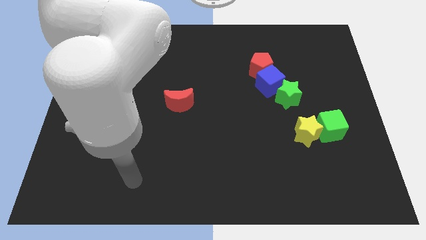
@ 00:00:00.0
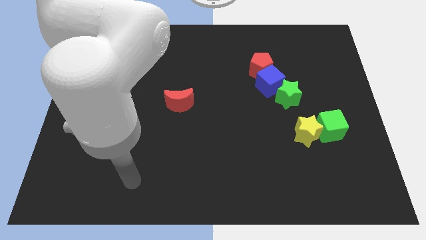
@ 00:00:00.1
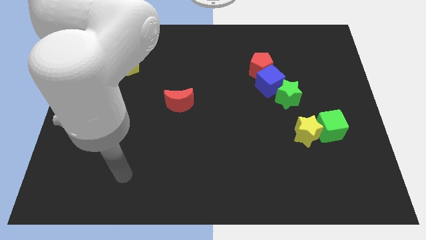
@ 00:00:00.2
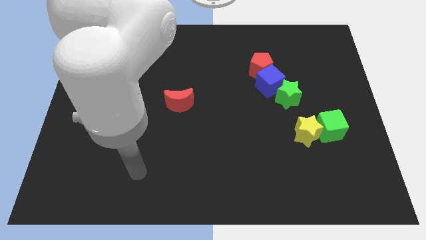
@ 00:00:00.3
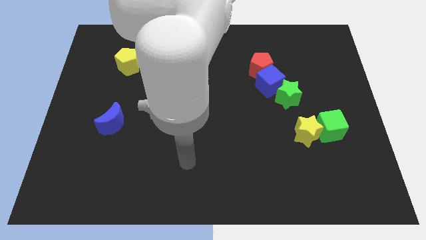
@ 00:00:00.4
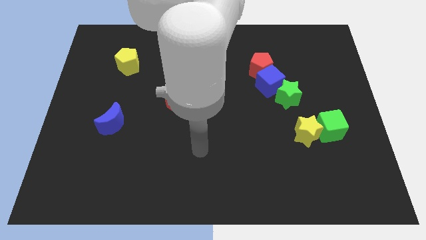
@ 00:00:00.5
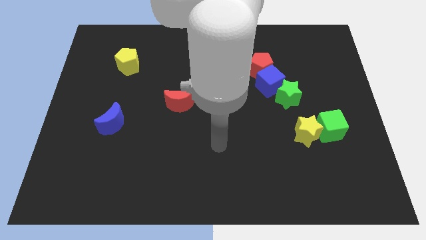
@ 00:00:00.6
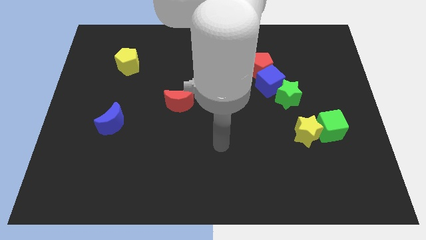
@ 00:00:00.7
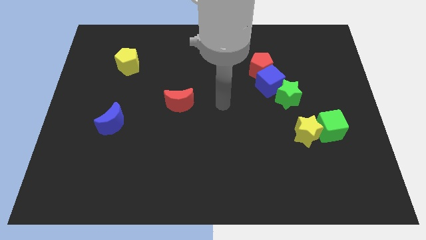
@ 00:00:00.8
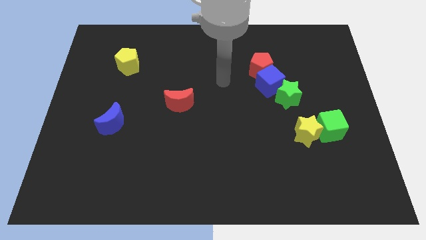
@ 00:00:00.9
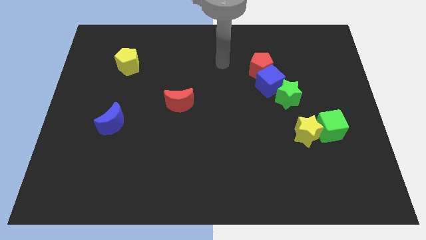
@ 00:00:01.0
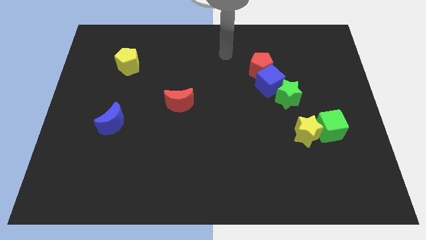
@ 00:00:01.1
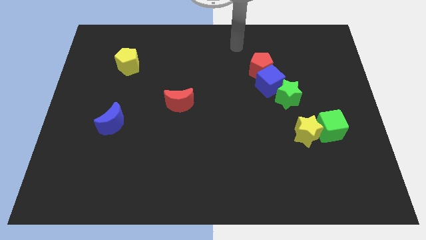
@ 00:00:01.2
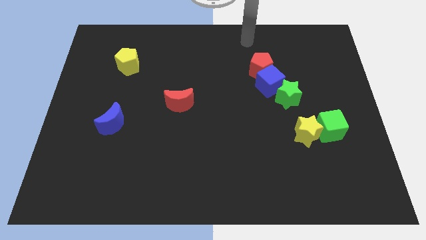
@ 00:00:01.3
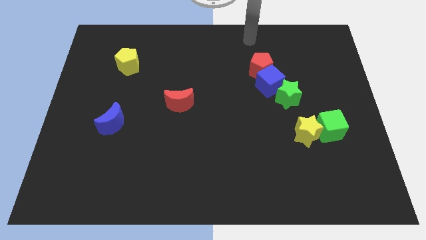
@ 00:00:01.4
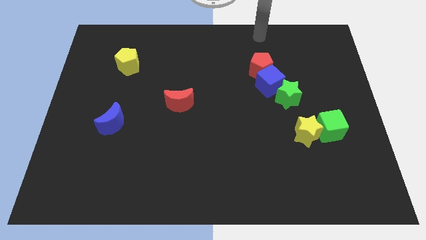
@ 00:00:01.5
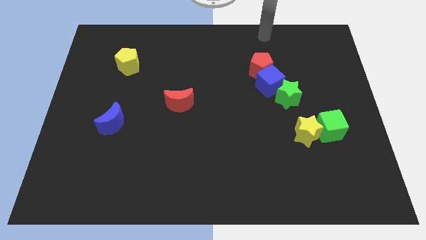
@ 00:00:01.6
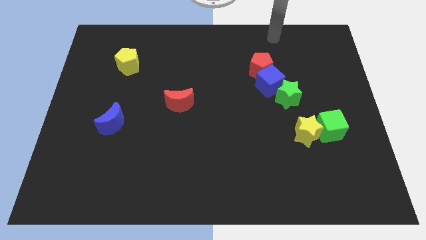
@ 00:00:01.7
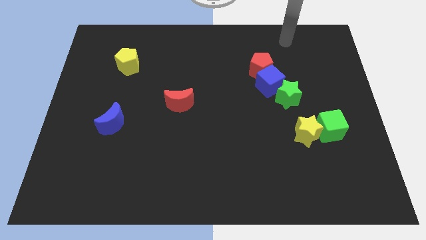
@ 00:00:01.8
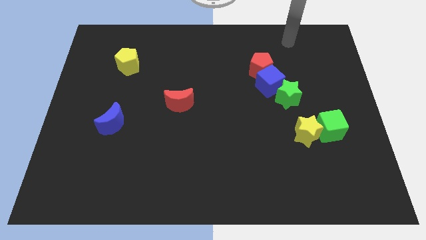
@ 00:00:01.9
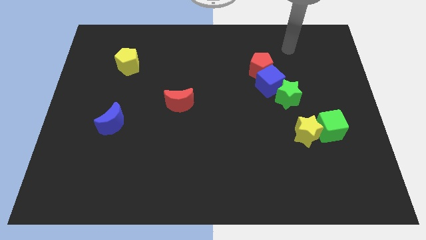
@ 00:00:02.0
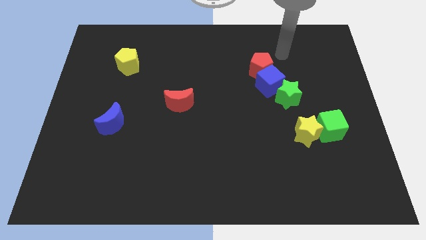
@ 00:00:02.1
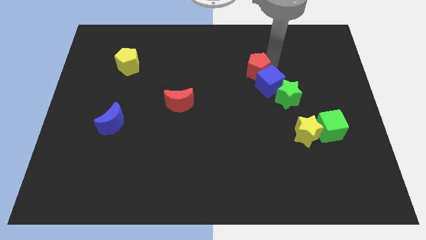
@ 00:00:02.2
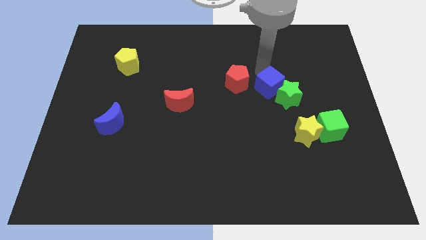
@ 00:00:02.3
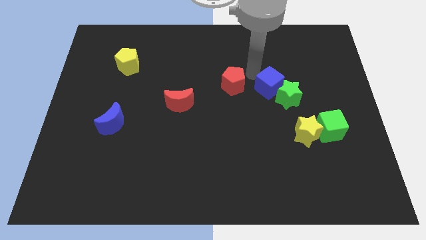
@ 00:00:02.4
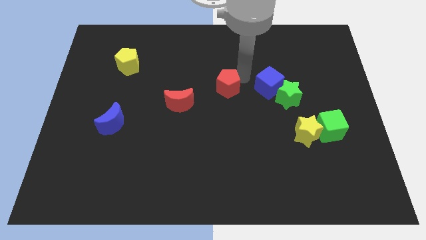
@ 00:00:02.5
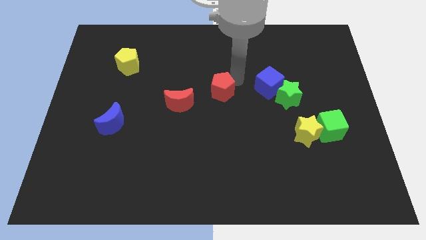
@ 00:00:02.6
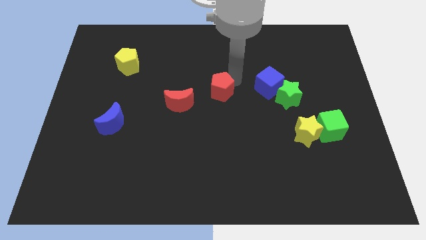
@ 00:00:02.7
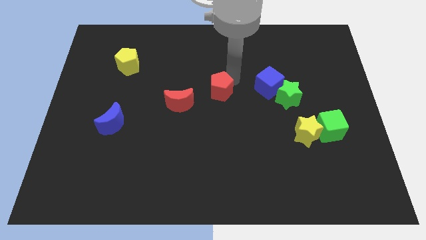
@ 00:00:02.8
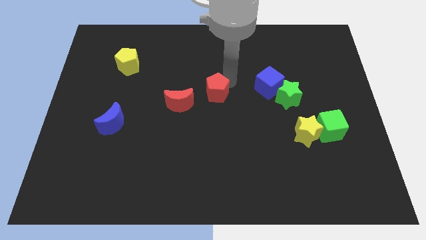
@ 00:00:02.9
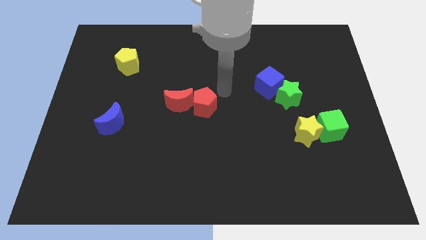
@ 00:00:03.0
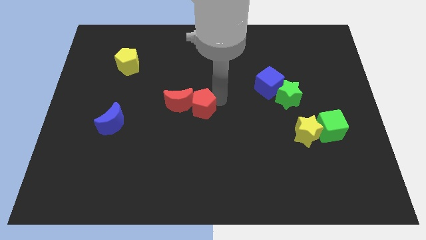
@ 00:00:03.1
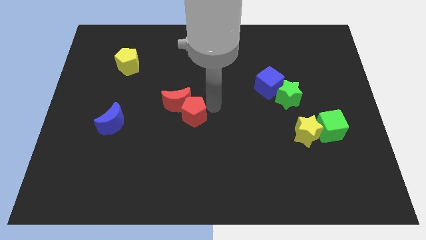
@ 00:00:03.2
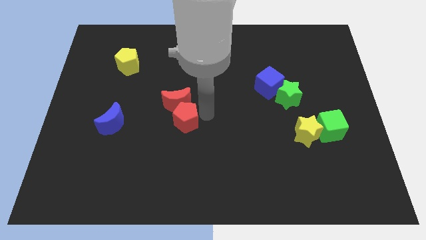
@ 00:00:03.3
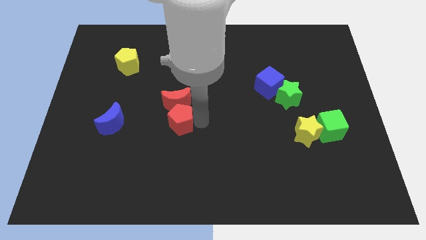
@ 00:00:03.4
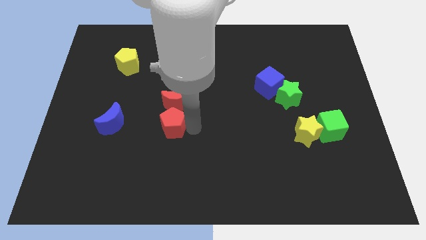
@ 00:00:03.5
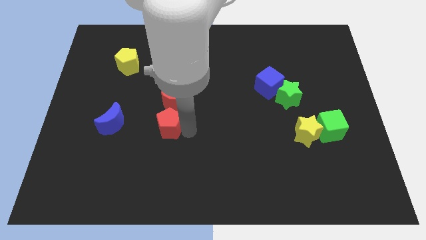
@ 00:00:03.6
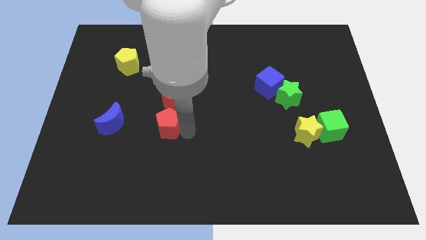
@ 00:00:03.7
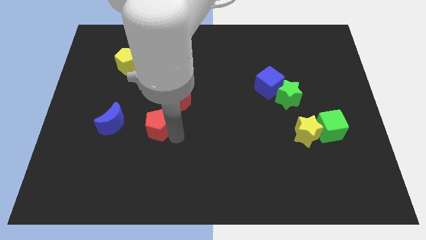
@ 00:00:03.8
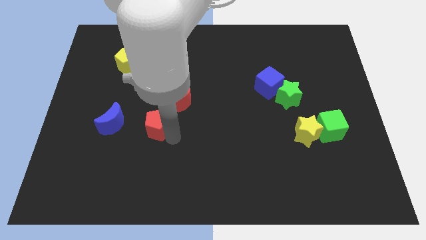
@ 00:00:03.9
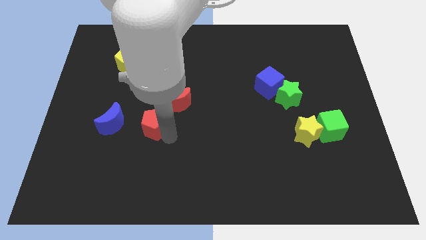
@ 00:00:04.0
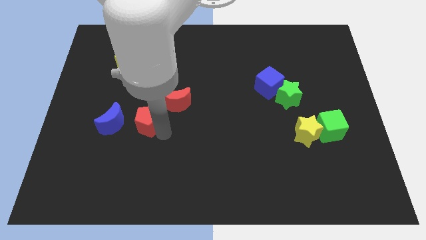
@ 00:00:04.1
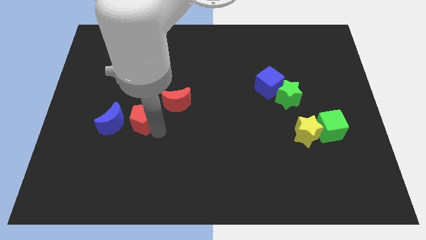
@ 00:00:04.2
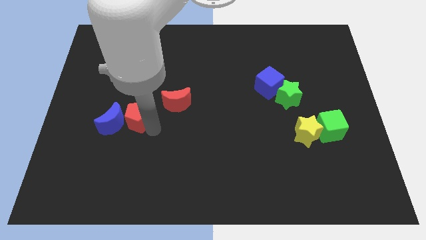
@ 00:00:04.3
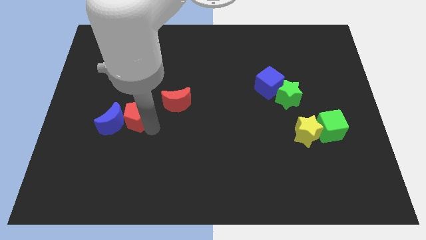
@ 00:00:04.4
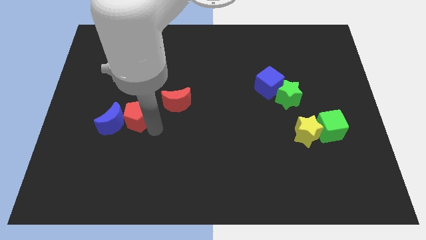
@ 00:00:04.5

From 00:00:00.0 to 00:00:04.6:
move the red pentagon next to the blue moon

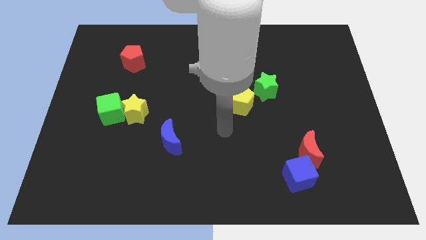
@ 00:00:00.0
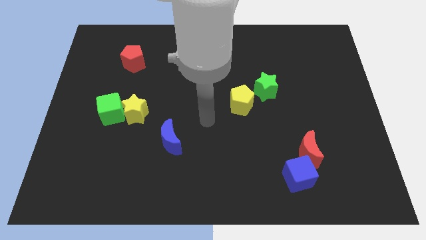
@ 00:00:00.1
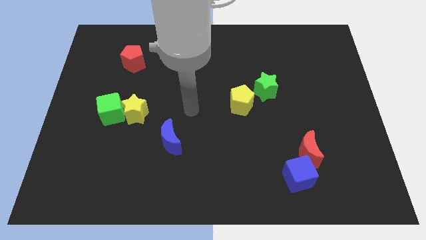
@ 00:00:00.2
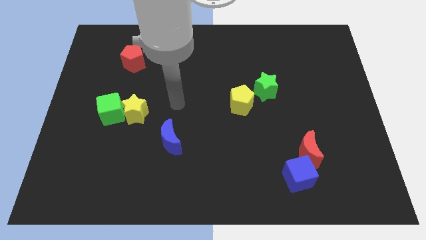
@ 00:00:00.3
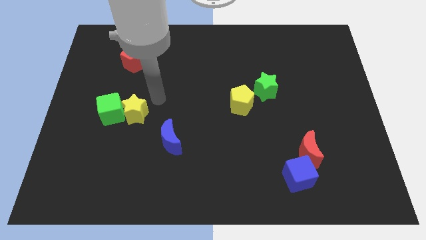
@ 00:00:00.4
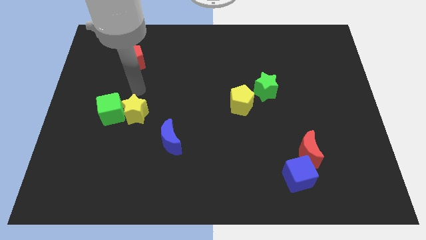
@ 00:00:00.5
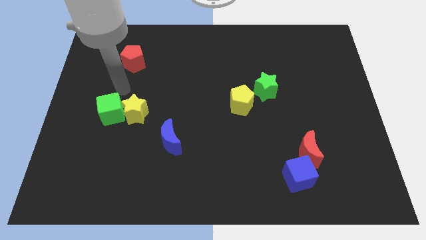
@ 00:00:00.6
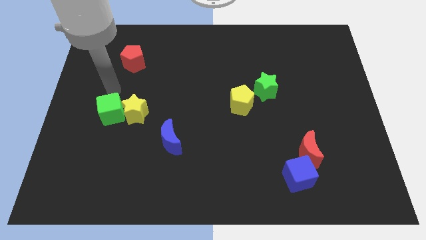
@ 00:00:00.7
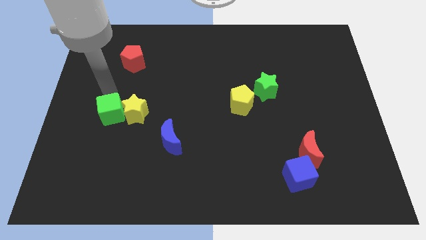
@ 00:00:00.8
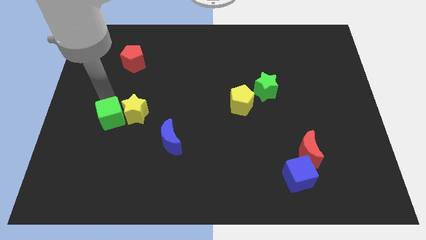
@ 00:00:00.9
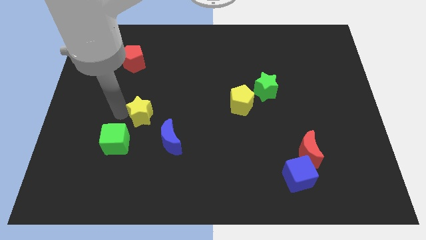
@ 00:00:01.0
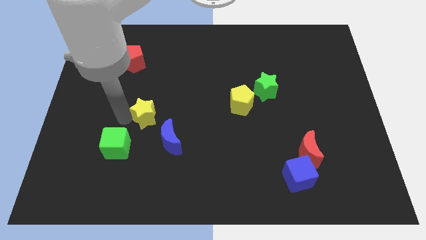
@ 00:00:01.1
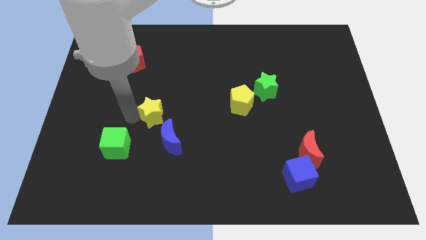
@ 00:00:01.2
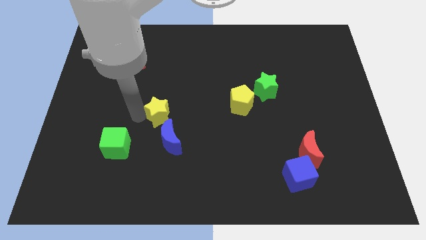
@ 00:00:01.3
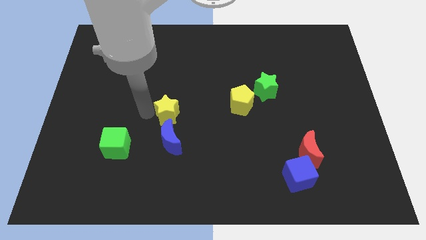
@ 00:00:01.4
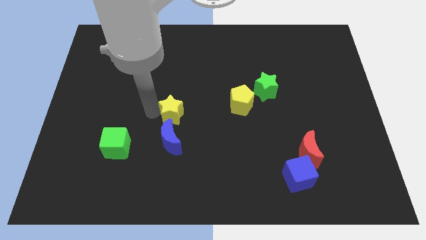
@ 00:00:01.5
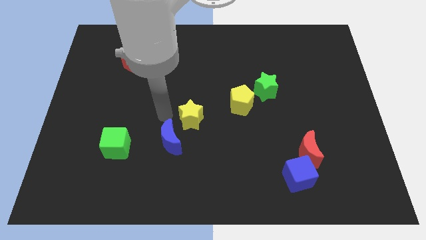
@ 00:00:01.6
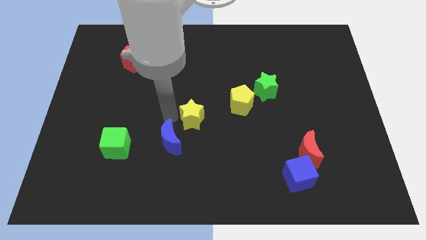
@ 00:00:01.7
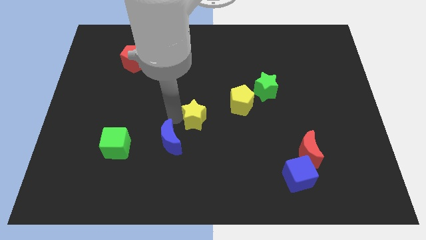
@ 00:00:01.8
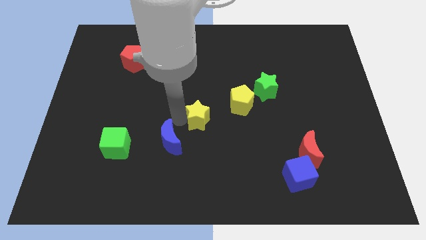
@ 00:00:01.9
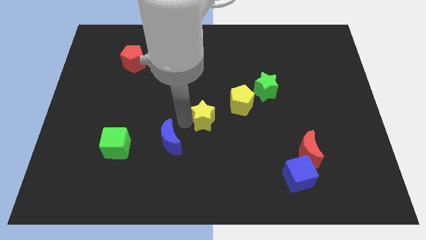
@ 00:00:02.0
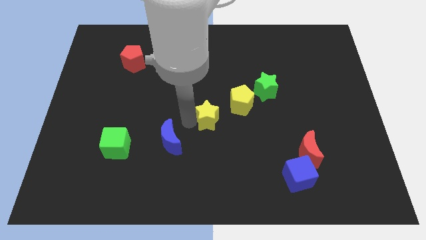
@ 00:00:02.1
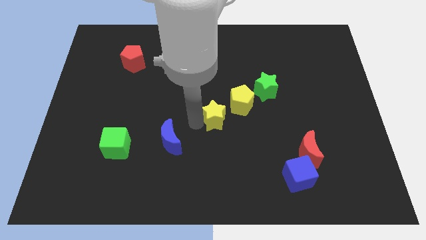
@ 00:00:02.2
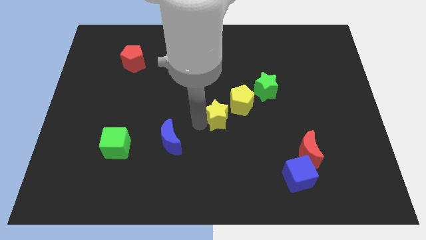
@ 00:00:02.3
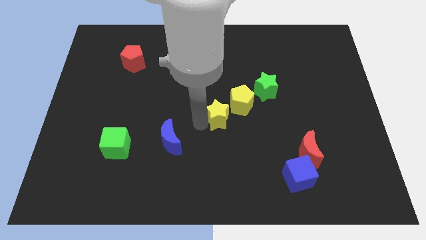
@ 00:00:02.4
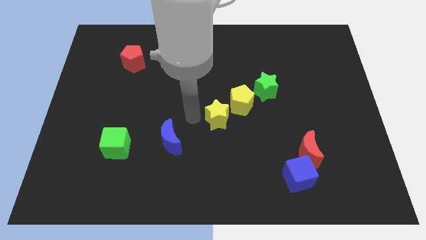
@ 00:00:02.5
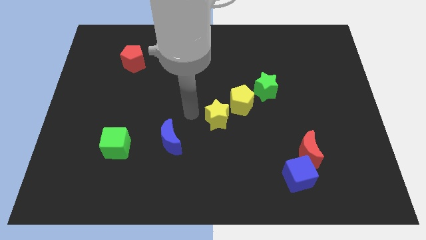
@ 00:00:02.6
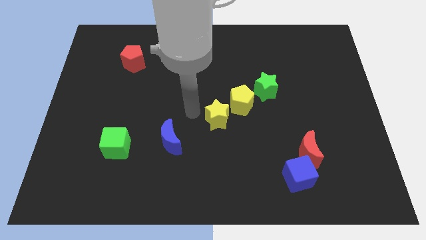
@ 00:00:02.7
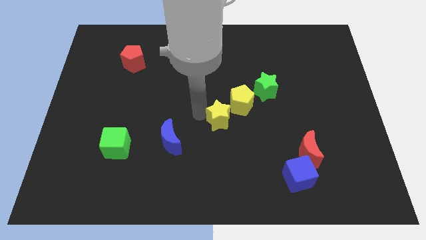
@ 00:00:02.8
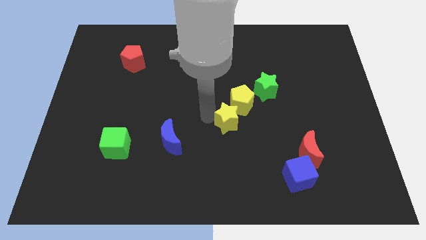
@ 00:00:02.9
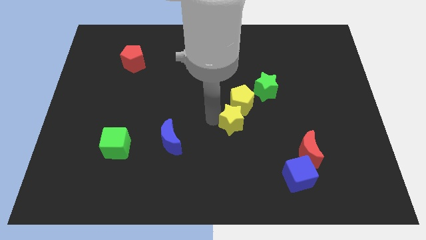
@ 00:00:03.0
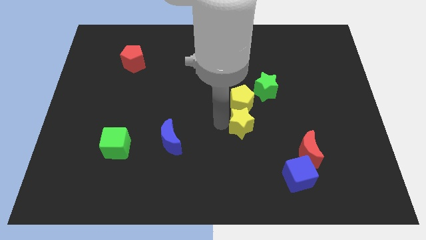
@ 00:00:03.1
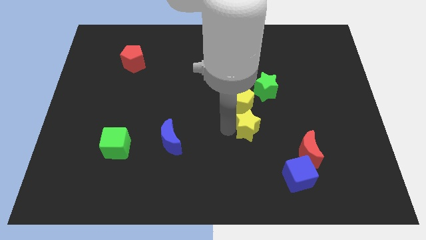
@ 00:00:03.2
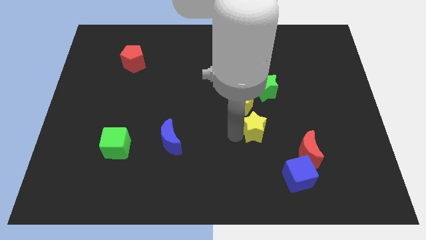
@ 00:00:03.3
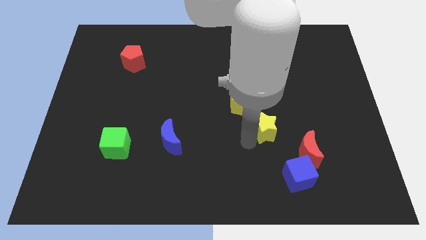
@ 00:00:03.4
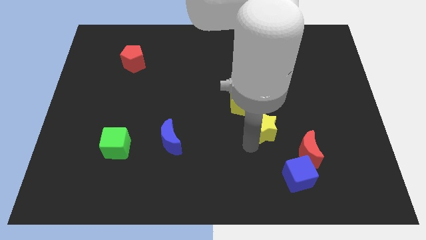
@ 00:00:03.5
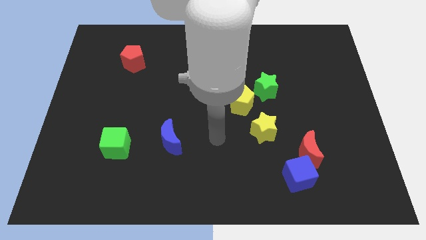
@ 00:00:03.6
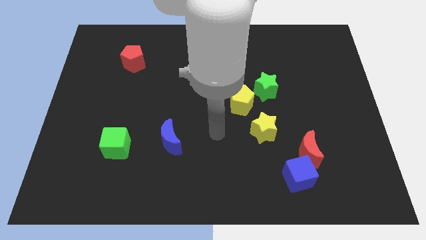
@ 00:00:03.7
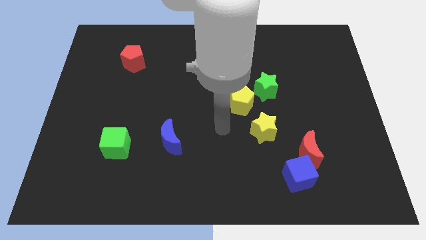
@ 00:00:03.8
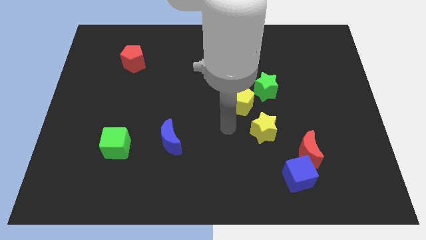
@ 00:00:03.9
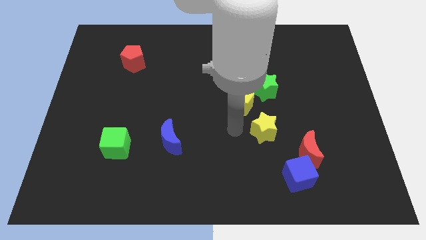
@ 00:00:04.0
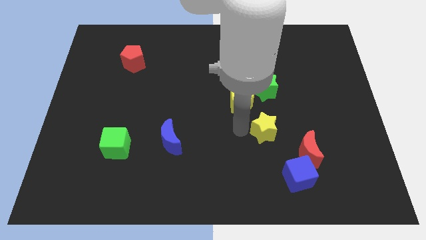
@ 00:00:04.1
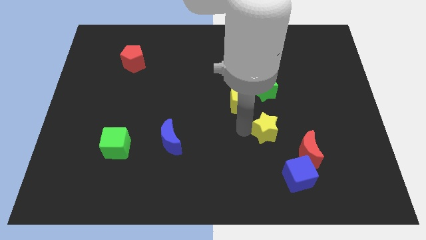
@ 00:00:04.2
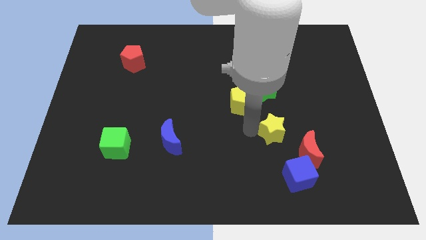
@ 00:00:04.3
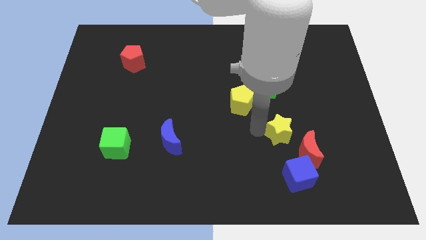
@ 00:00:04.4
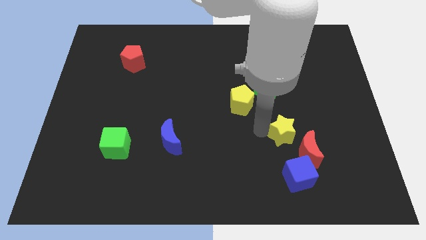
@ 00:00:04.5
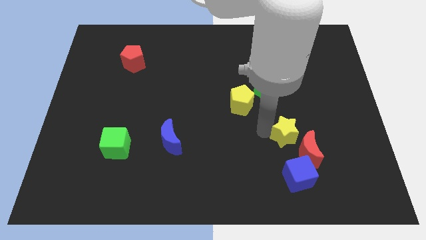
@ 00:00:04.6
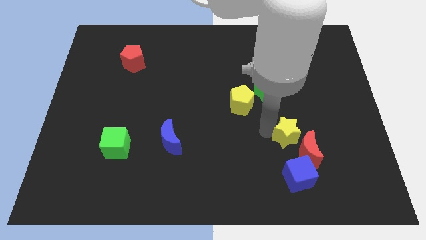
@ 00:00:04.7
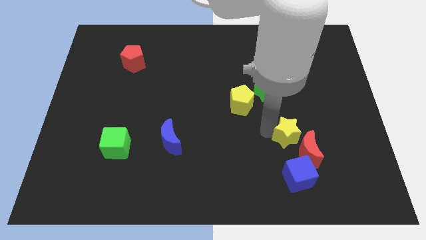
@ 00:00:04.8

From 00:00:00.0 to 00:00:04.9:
put the yellow star next to the red moon
